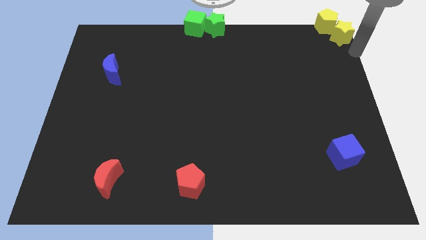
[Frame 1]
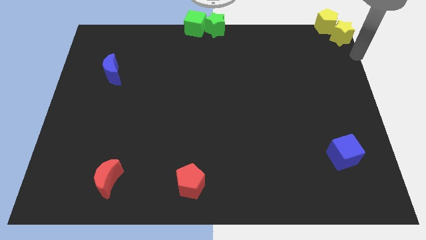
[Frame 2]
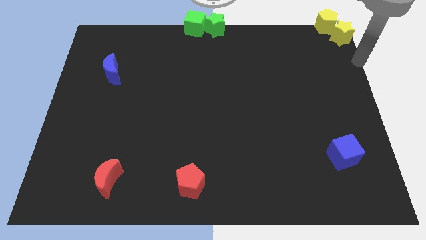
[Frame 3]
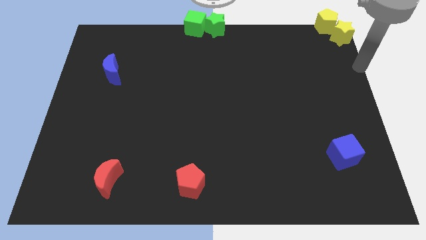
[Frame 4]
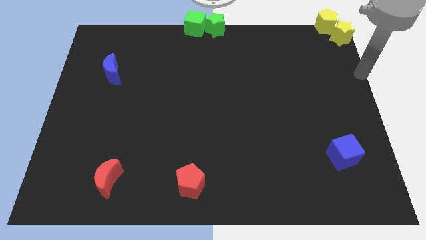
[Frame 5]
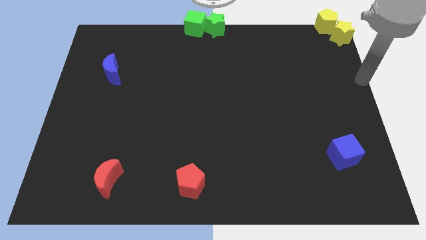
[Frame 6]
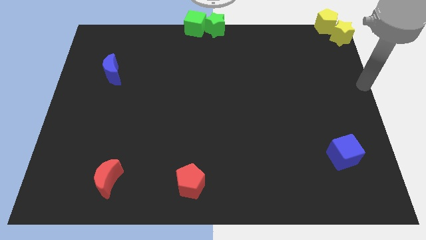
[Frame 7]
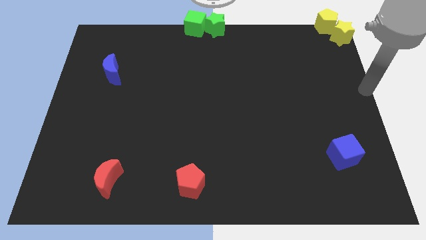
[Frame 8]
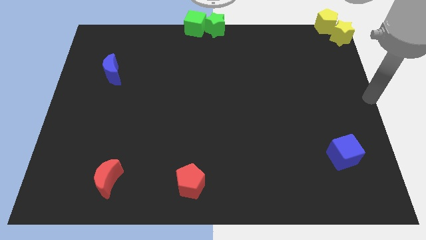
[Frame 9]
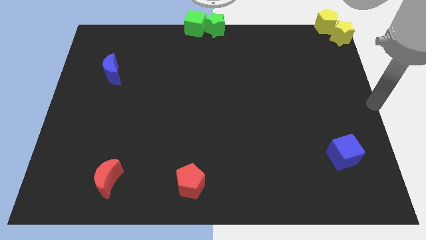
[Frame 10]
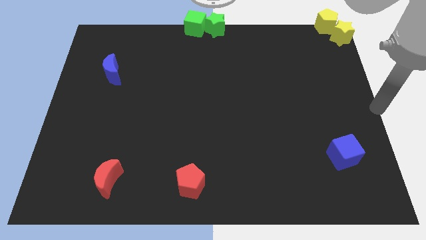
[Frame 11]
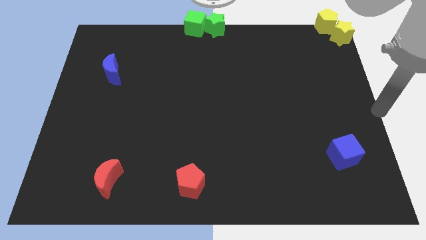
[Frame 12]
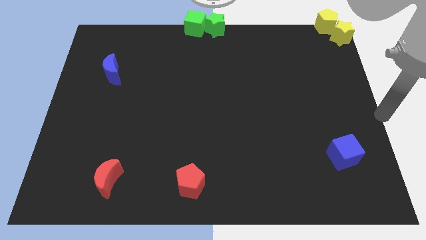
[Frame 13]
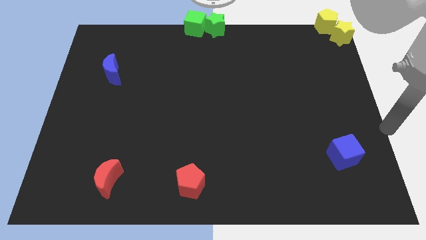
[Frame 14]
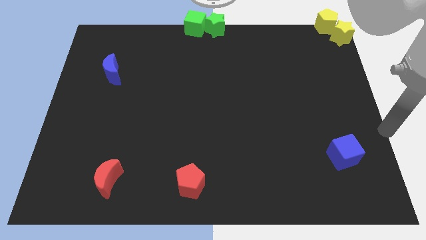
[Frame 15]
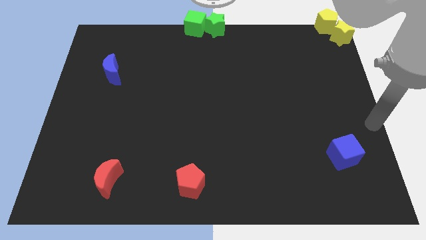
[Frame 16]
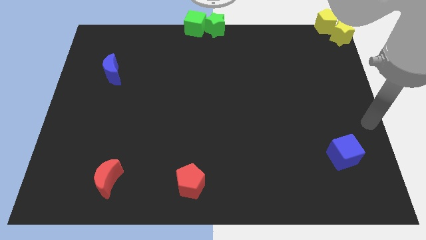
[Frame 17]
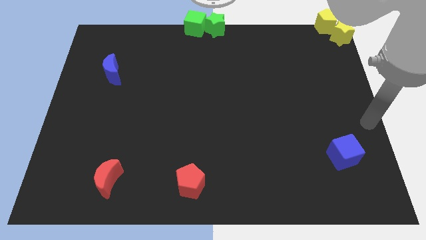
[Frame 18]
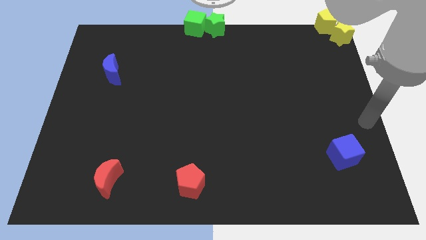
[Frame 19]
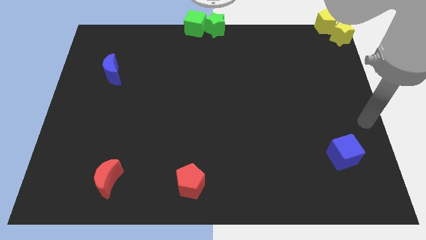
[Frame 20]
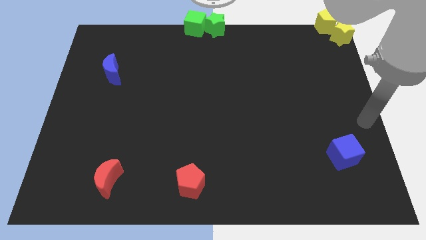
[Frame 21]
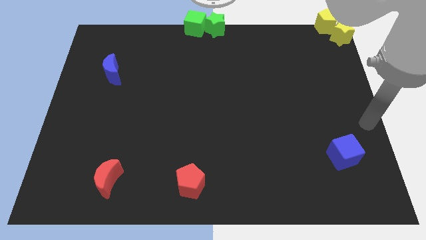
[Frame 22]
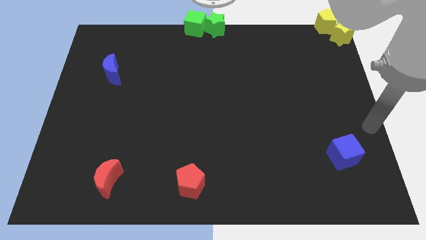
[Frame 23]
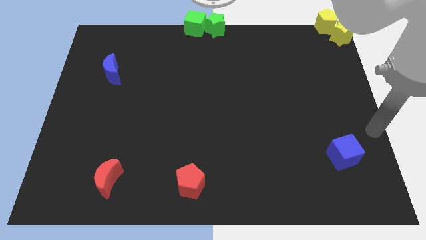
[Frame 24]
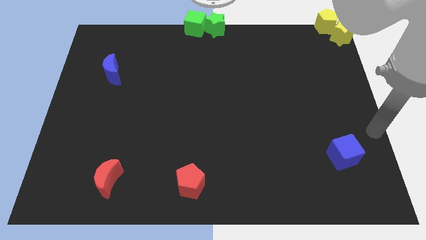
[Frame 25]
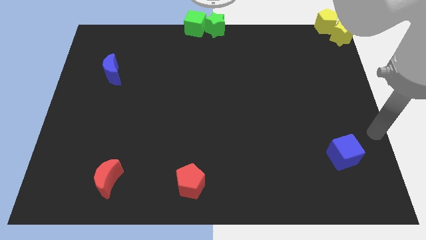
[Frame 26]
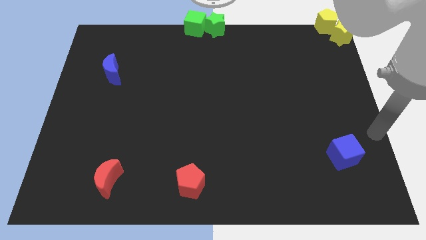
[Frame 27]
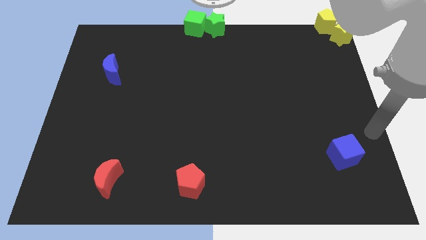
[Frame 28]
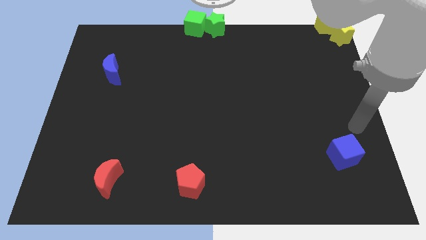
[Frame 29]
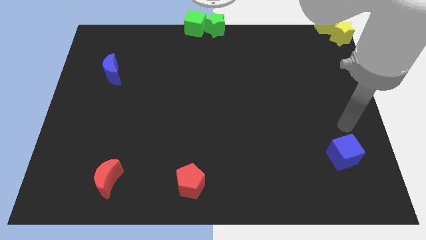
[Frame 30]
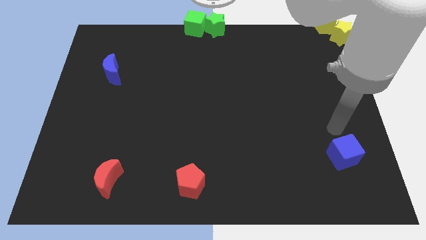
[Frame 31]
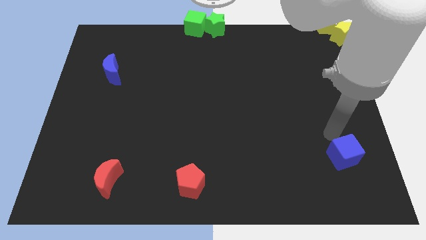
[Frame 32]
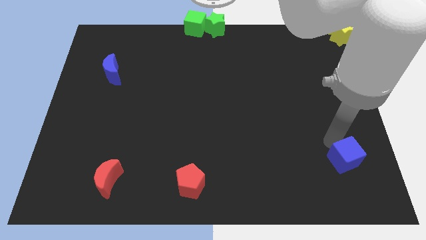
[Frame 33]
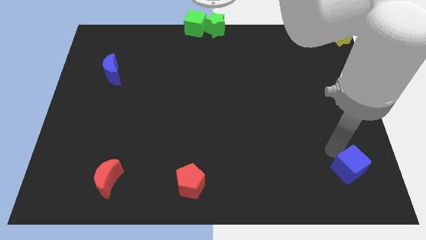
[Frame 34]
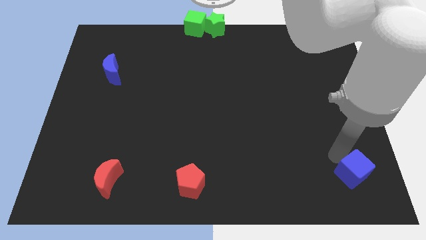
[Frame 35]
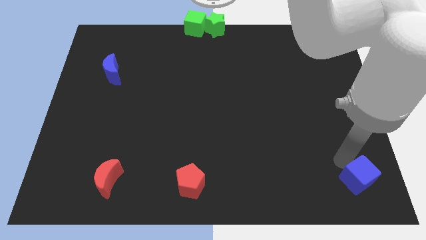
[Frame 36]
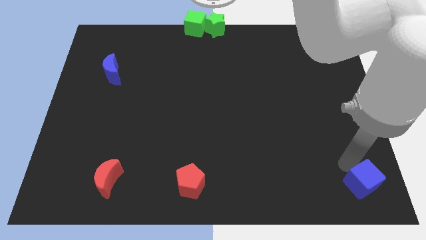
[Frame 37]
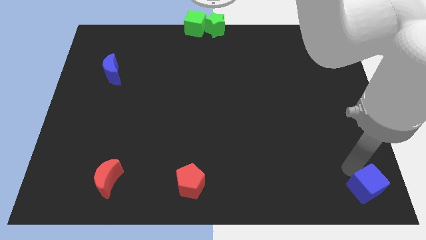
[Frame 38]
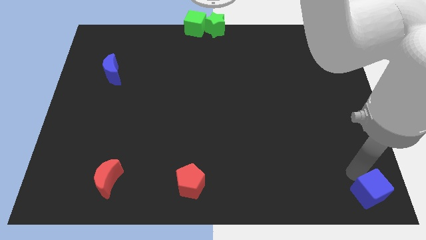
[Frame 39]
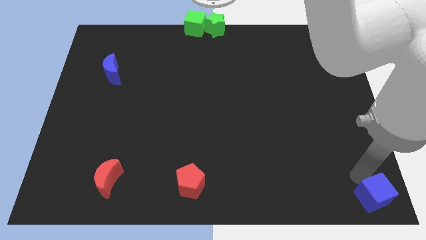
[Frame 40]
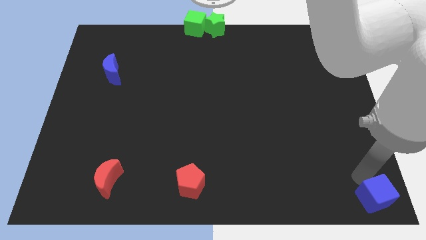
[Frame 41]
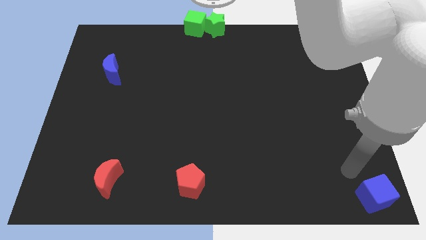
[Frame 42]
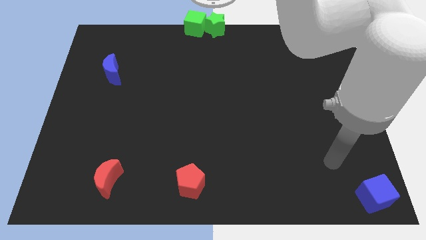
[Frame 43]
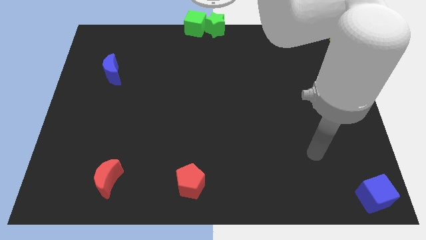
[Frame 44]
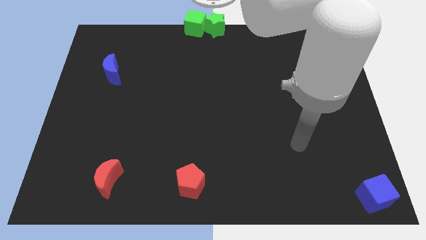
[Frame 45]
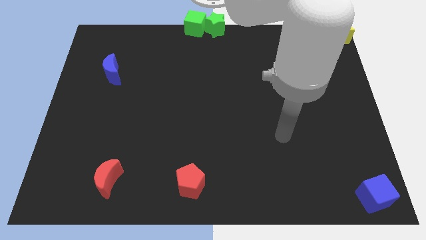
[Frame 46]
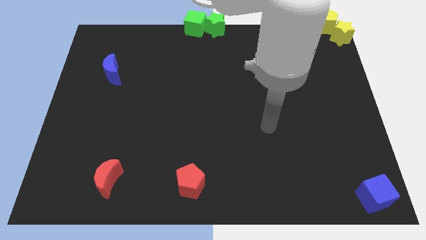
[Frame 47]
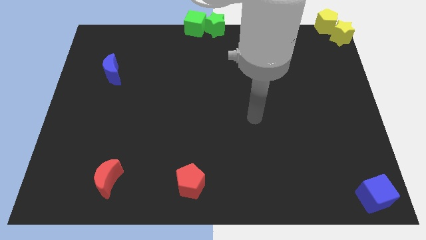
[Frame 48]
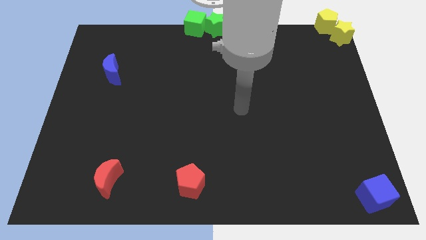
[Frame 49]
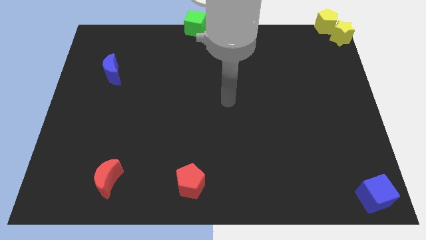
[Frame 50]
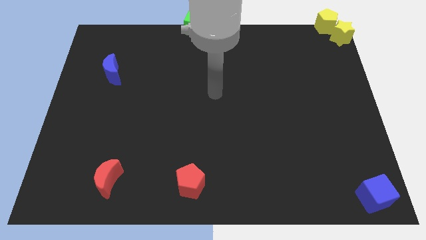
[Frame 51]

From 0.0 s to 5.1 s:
move the blue cube to the bottom right of the board

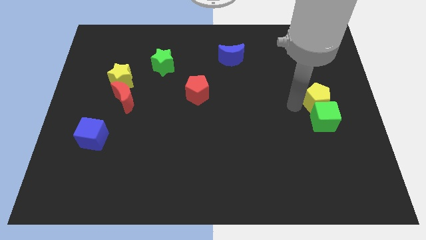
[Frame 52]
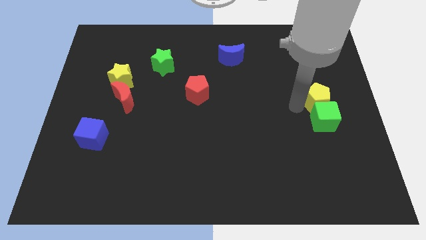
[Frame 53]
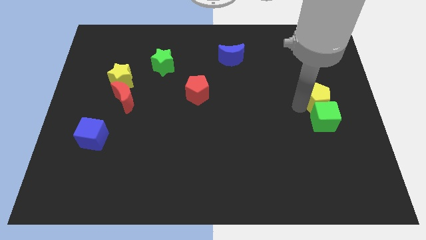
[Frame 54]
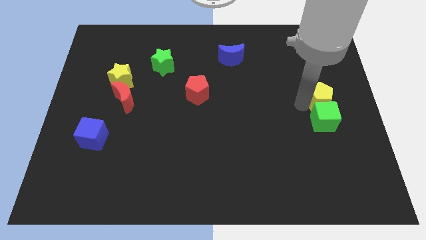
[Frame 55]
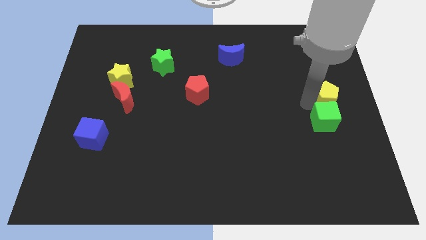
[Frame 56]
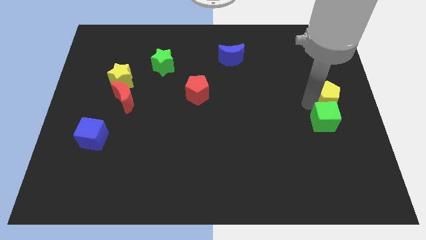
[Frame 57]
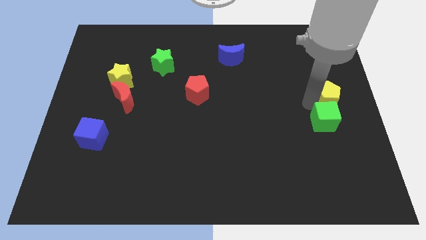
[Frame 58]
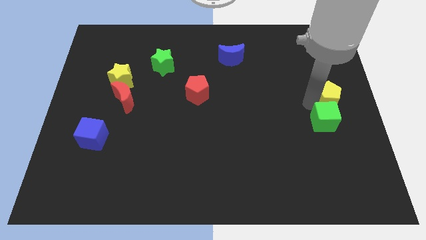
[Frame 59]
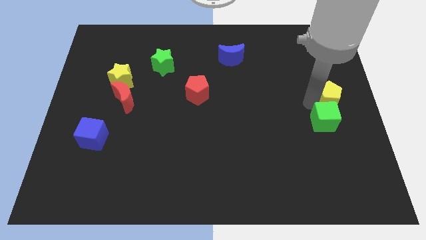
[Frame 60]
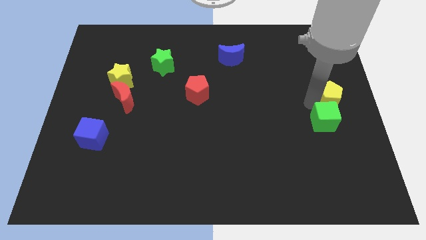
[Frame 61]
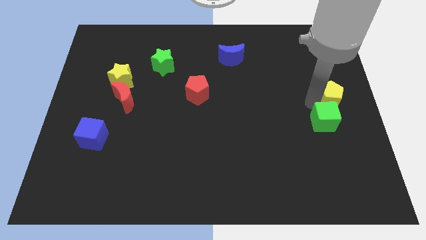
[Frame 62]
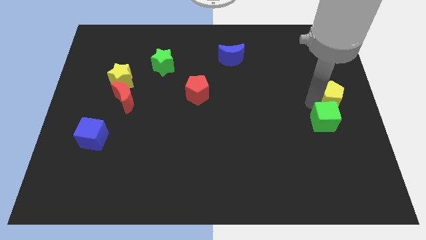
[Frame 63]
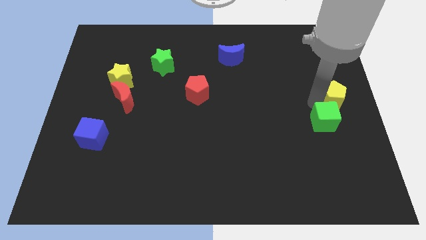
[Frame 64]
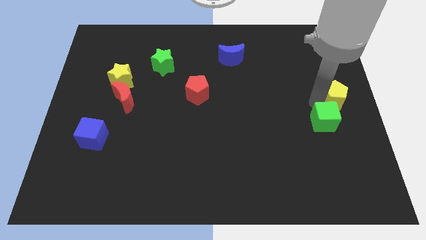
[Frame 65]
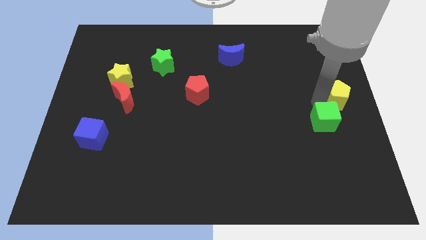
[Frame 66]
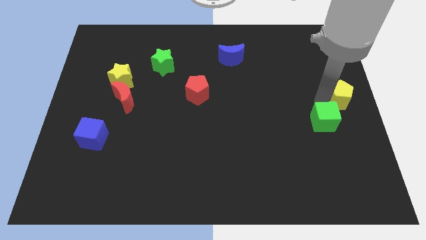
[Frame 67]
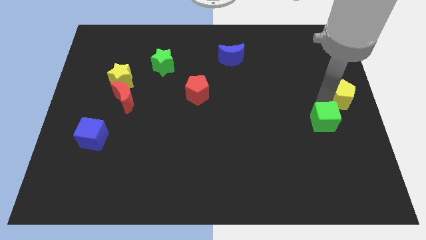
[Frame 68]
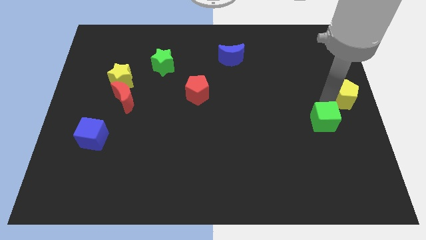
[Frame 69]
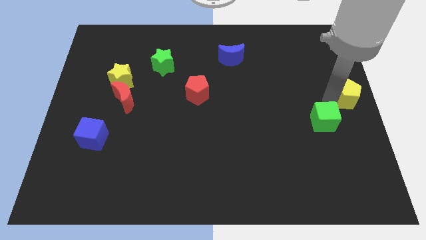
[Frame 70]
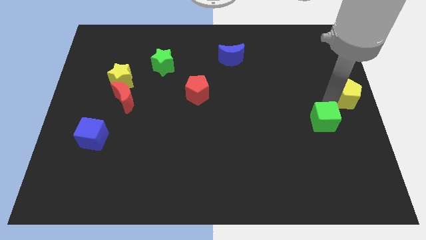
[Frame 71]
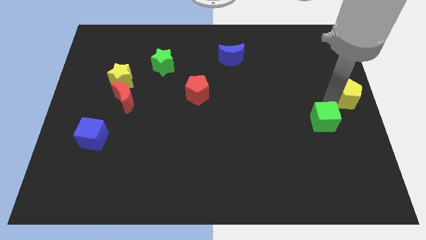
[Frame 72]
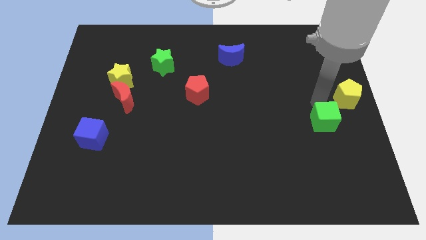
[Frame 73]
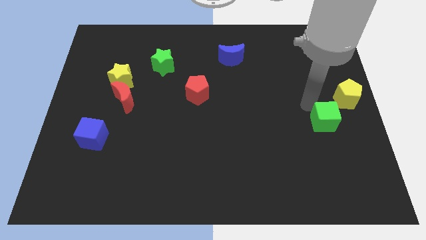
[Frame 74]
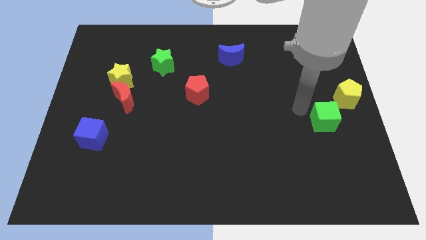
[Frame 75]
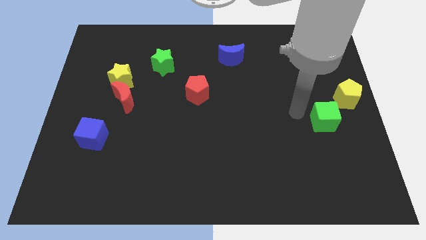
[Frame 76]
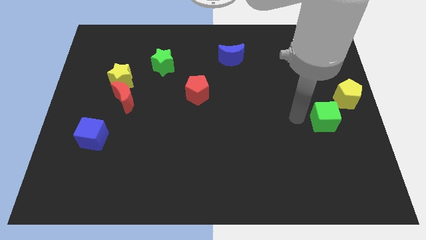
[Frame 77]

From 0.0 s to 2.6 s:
separate the yellow pentagon from the green cube

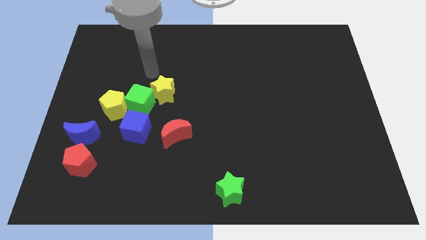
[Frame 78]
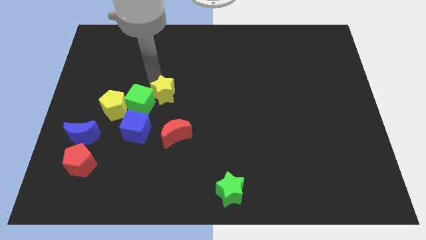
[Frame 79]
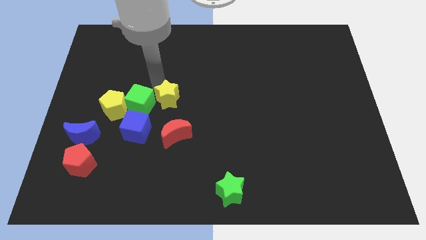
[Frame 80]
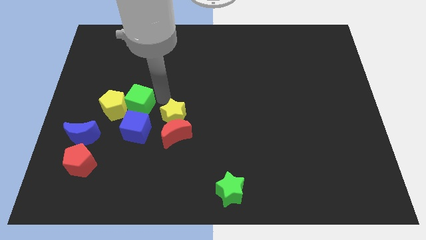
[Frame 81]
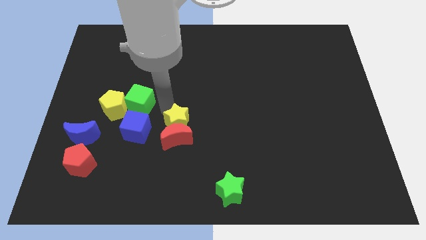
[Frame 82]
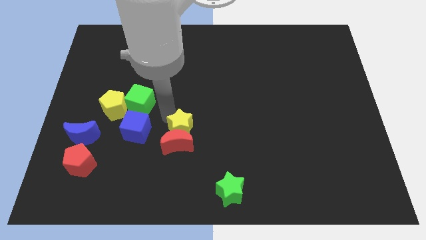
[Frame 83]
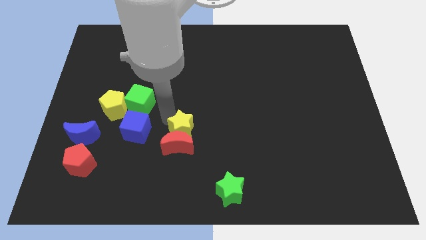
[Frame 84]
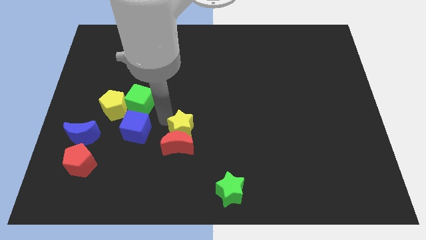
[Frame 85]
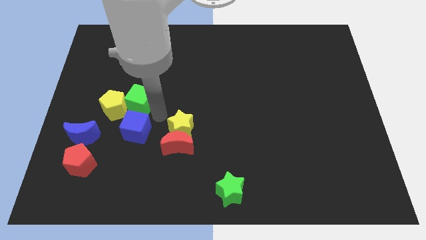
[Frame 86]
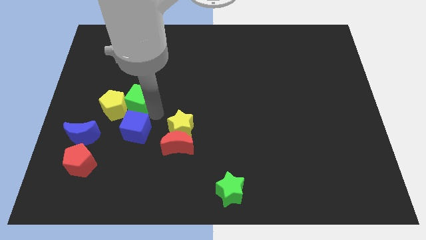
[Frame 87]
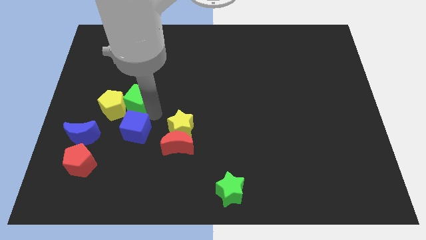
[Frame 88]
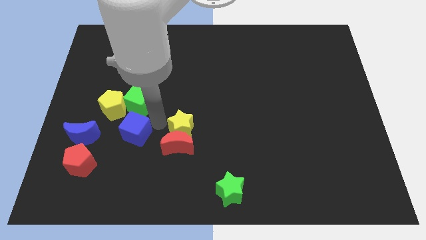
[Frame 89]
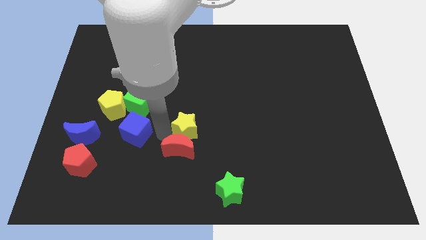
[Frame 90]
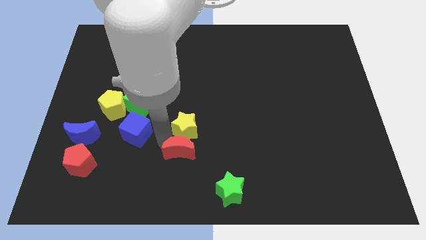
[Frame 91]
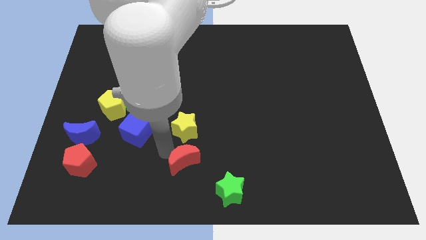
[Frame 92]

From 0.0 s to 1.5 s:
push red crescent with yellow star

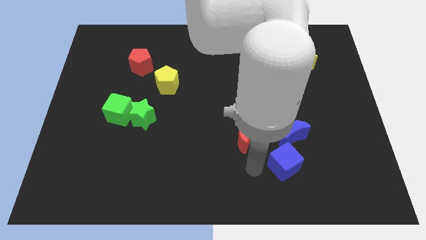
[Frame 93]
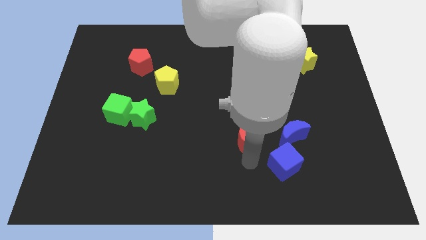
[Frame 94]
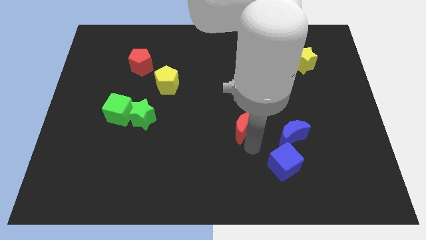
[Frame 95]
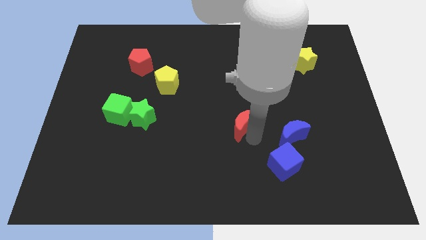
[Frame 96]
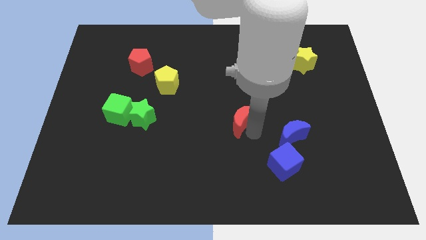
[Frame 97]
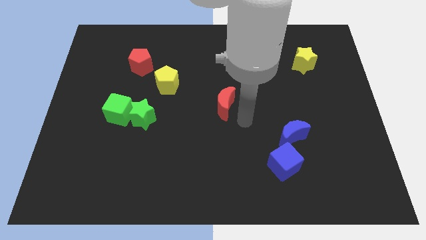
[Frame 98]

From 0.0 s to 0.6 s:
move the red crescent to the center
